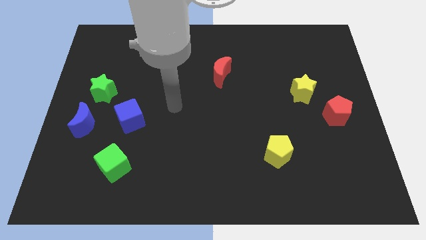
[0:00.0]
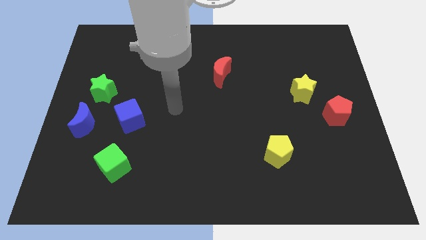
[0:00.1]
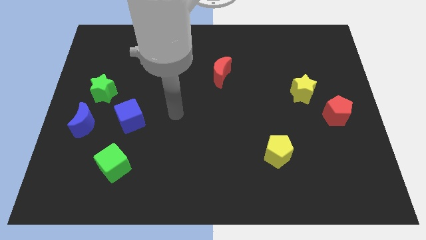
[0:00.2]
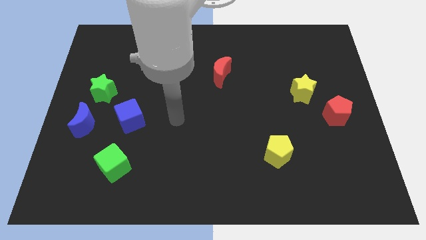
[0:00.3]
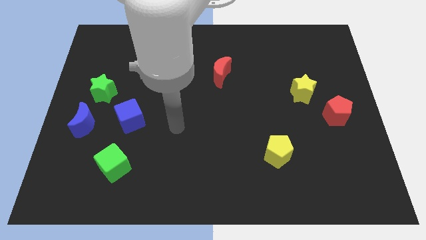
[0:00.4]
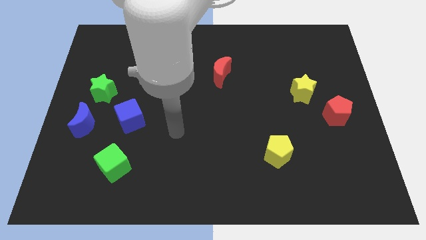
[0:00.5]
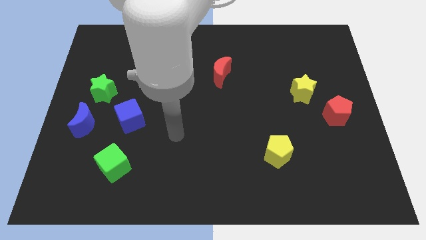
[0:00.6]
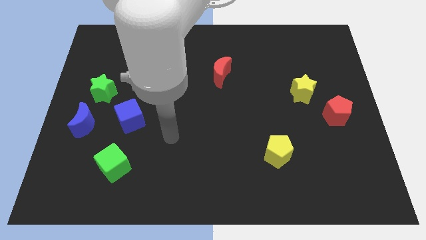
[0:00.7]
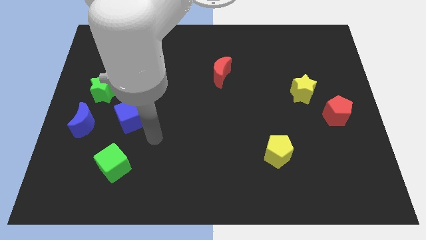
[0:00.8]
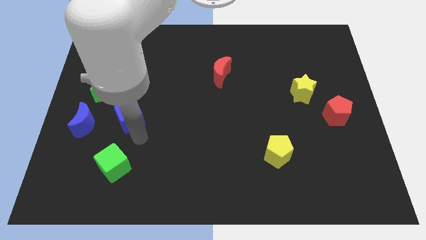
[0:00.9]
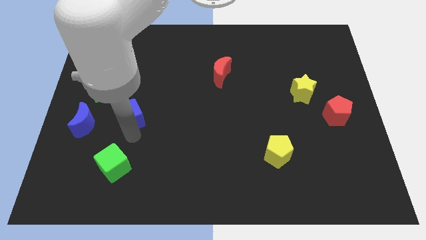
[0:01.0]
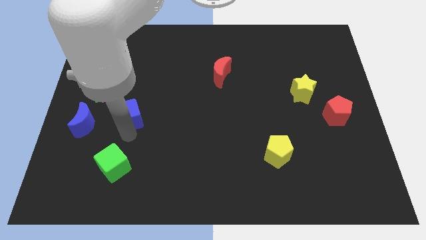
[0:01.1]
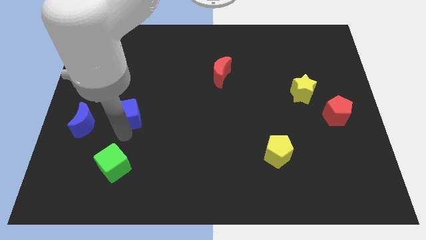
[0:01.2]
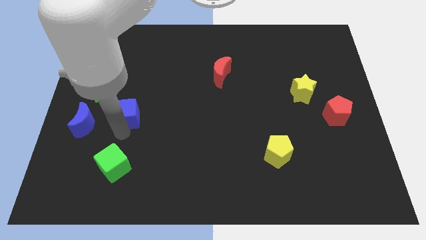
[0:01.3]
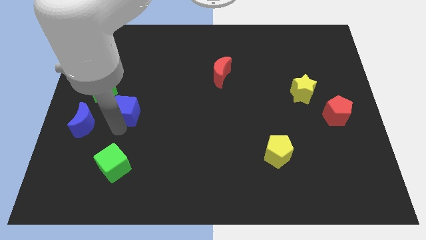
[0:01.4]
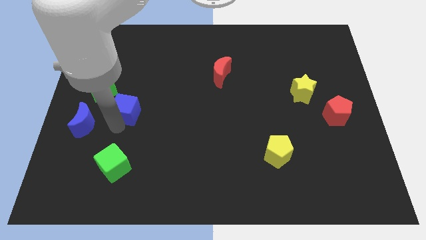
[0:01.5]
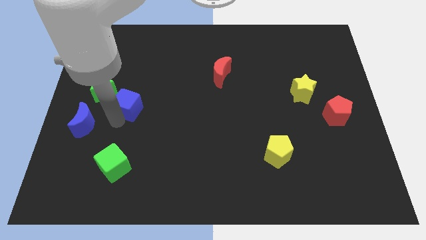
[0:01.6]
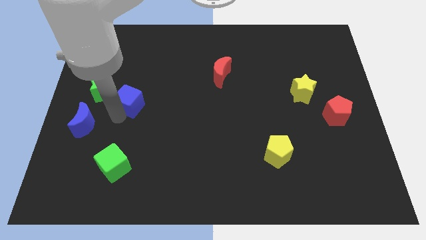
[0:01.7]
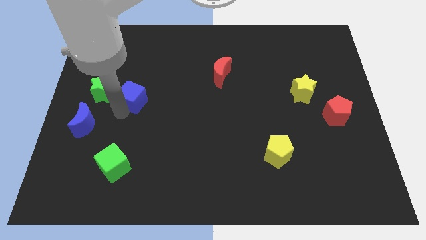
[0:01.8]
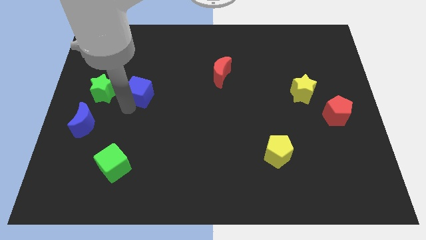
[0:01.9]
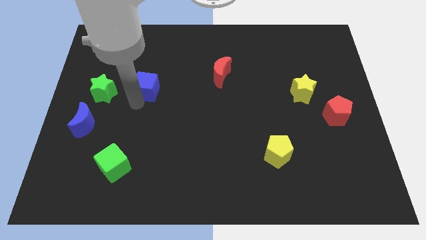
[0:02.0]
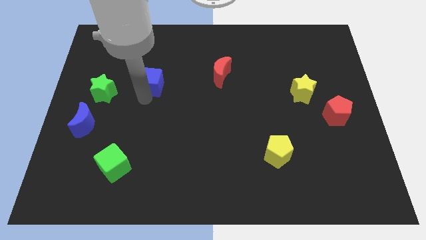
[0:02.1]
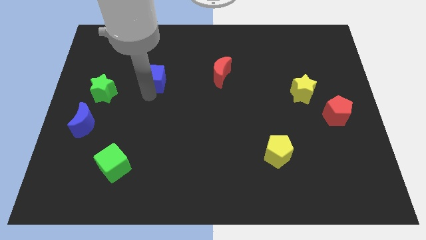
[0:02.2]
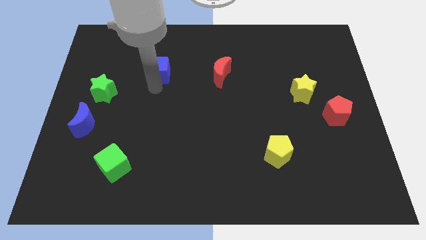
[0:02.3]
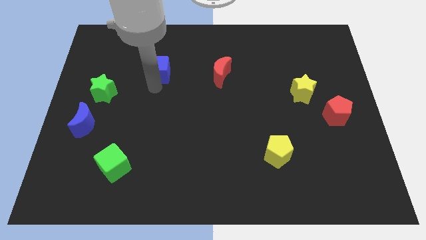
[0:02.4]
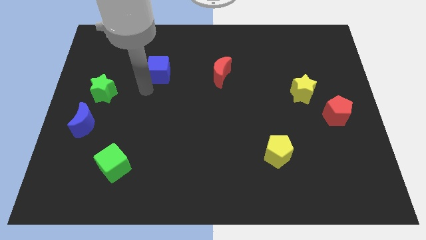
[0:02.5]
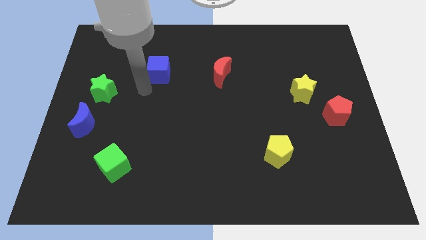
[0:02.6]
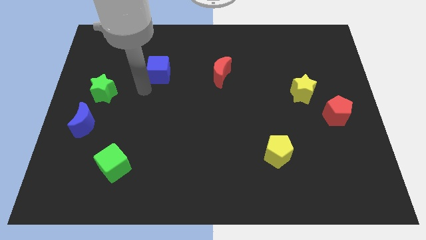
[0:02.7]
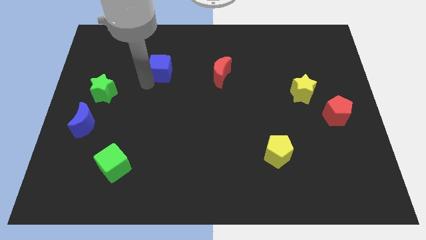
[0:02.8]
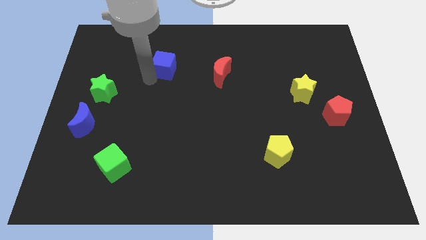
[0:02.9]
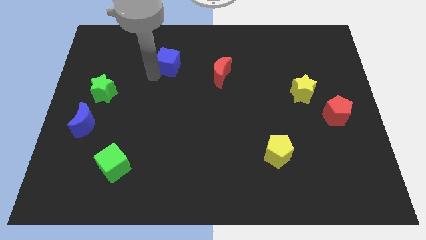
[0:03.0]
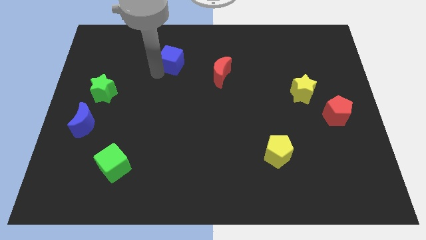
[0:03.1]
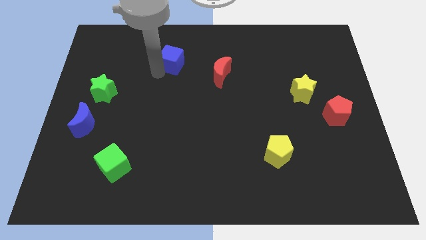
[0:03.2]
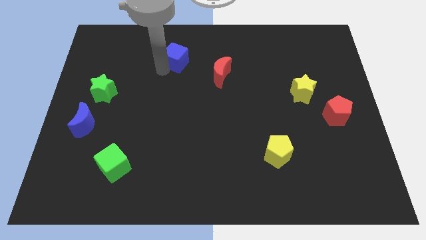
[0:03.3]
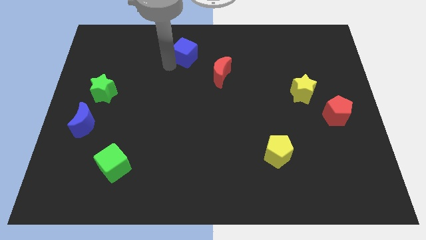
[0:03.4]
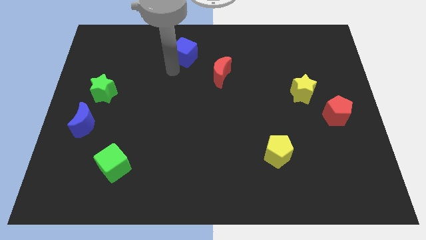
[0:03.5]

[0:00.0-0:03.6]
move the blue cube towards up side

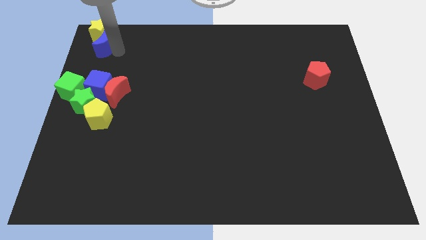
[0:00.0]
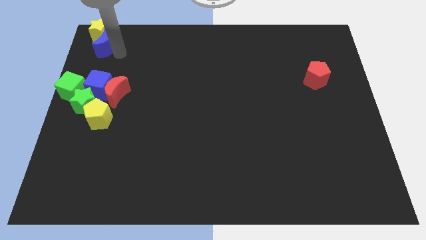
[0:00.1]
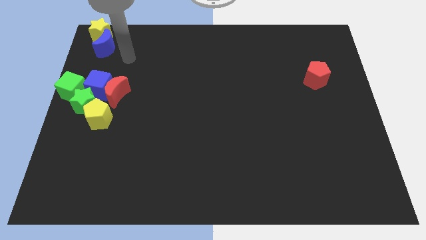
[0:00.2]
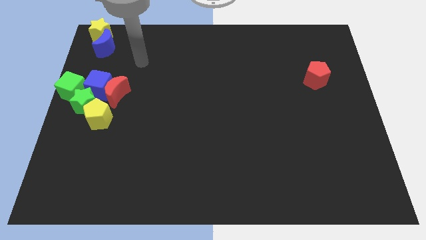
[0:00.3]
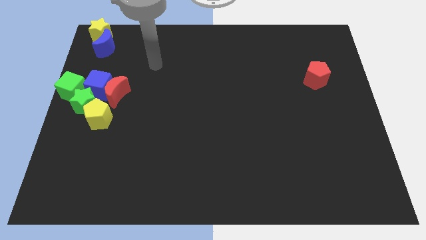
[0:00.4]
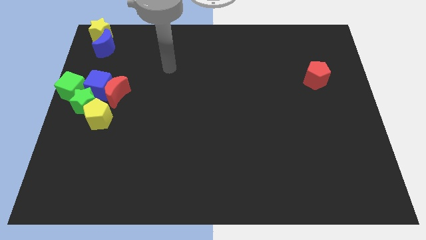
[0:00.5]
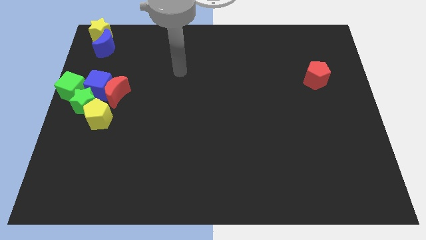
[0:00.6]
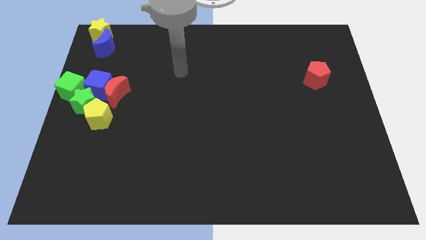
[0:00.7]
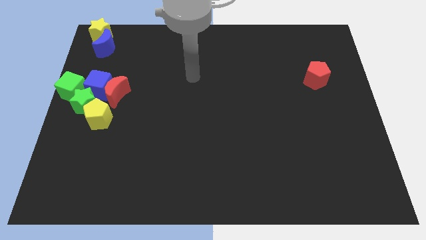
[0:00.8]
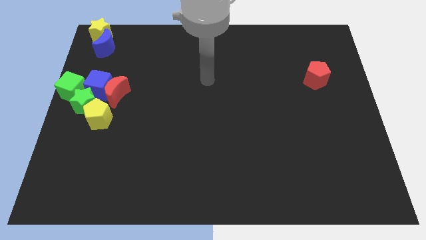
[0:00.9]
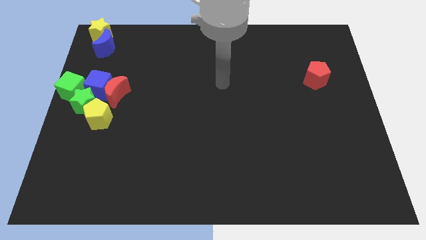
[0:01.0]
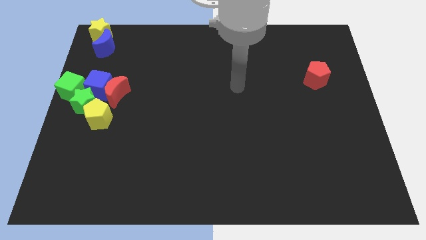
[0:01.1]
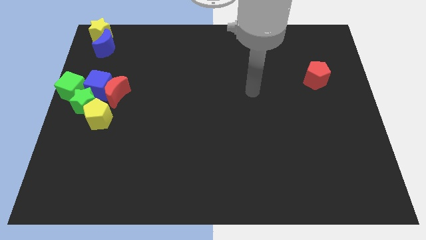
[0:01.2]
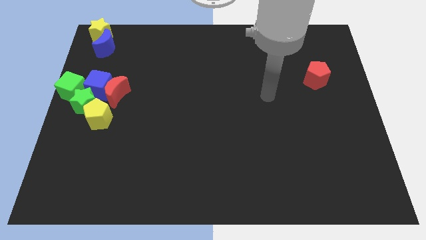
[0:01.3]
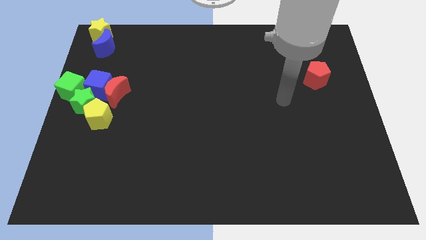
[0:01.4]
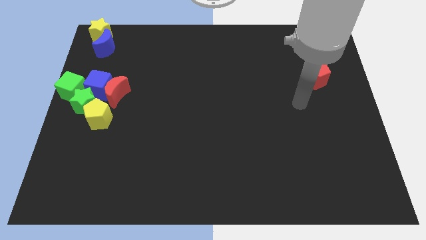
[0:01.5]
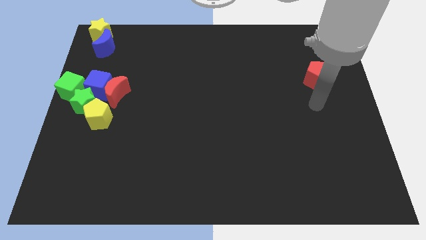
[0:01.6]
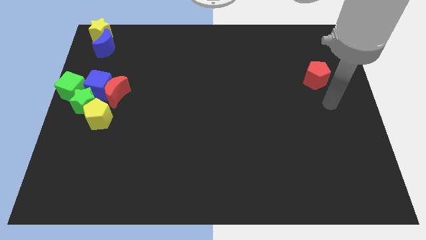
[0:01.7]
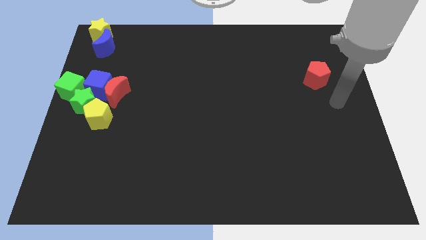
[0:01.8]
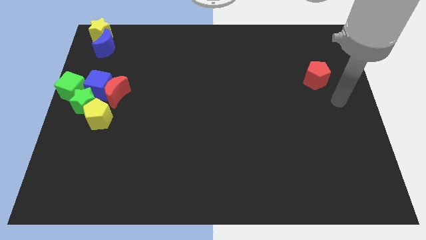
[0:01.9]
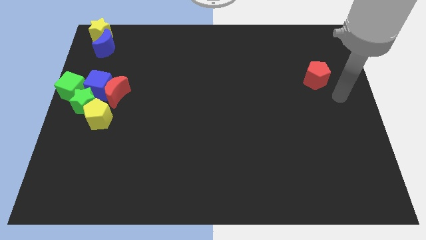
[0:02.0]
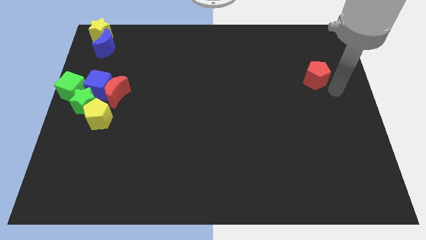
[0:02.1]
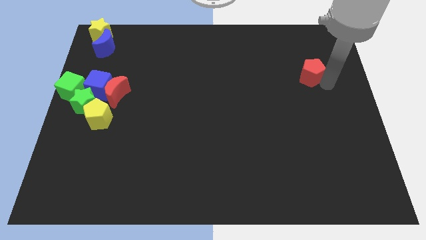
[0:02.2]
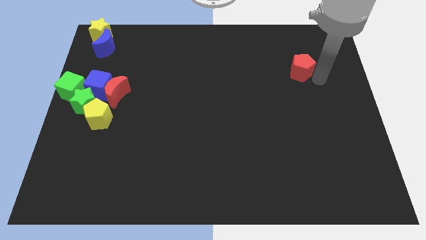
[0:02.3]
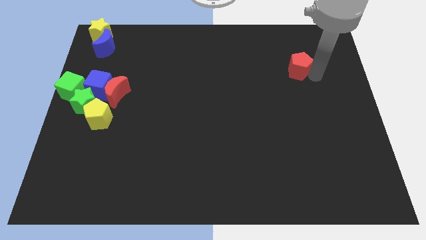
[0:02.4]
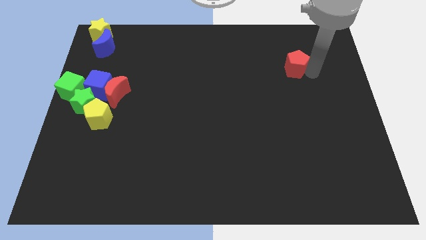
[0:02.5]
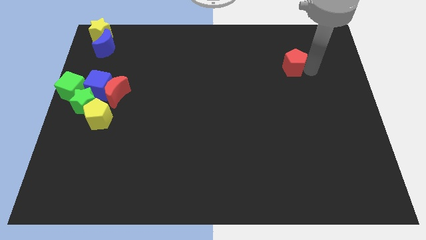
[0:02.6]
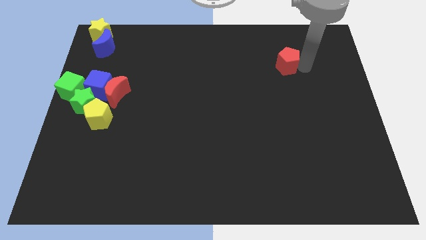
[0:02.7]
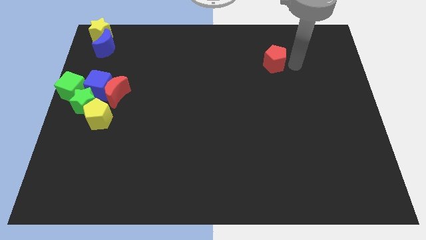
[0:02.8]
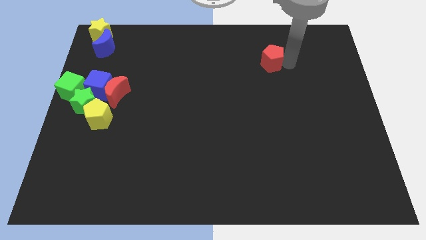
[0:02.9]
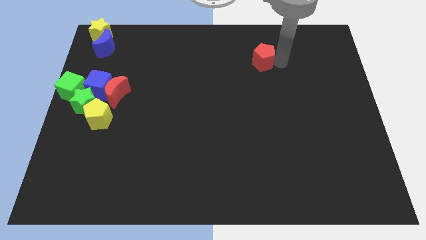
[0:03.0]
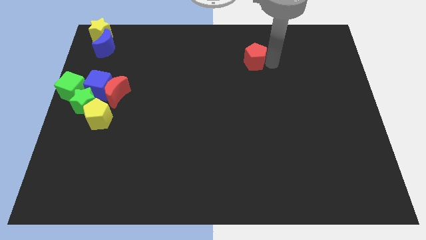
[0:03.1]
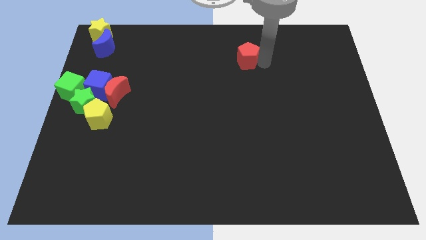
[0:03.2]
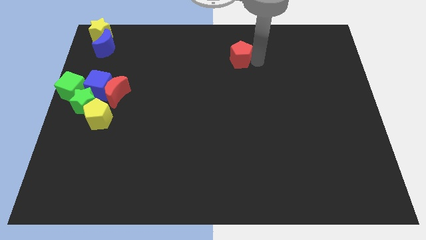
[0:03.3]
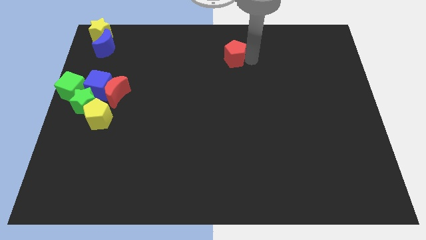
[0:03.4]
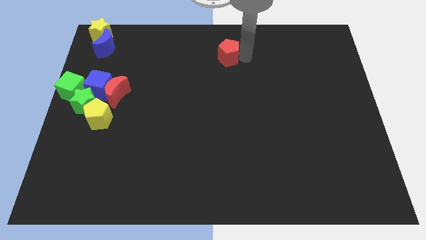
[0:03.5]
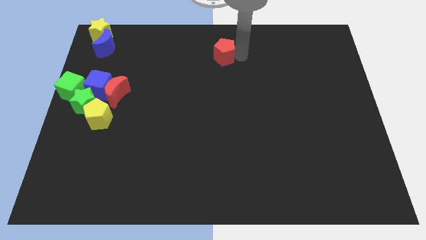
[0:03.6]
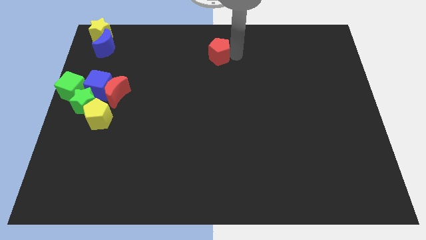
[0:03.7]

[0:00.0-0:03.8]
push the red pentagon towards the top center of the board

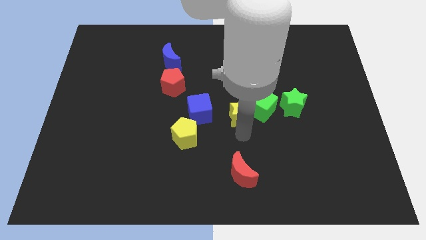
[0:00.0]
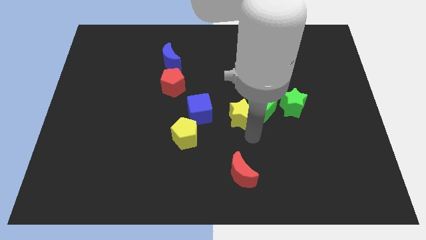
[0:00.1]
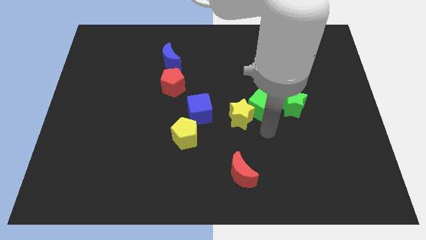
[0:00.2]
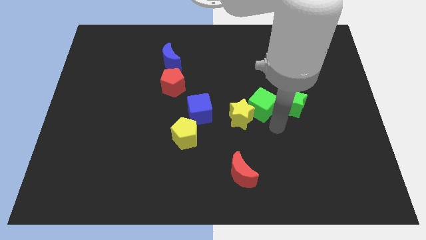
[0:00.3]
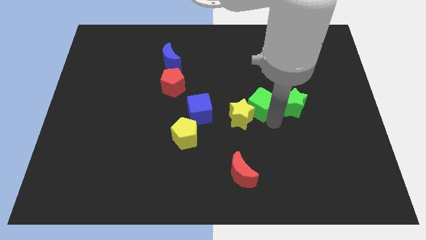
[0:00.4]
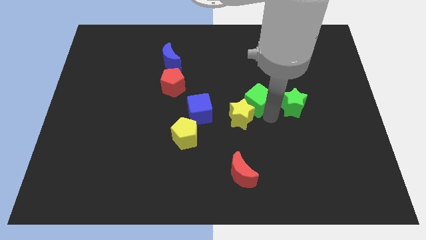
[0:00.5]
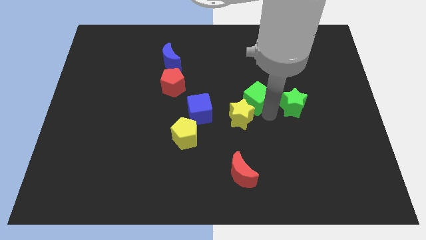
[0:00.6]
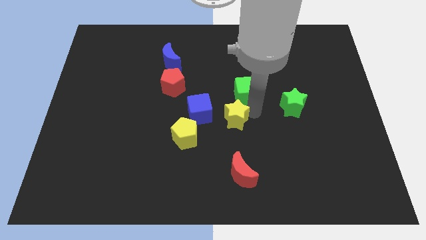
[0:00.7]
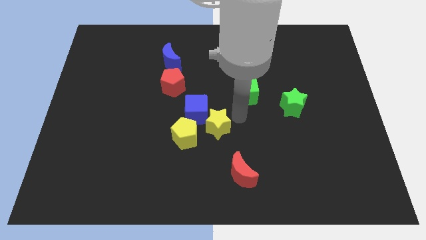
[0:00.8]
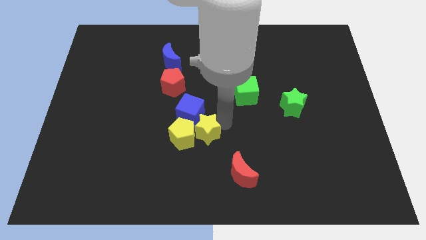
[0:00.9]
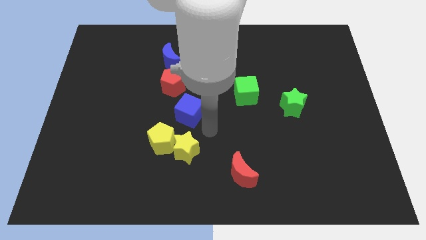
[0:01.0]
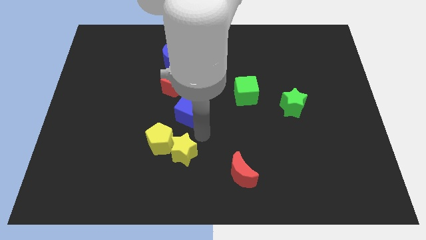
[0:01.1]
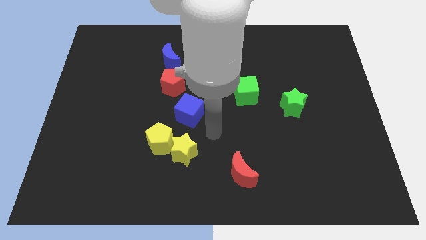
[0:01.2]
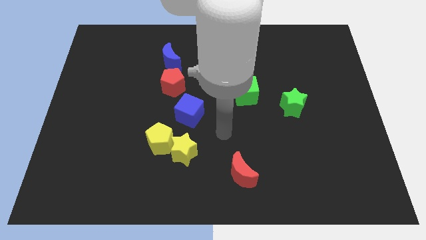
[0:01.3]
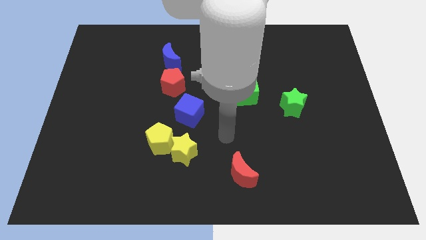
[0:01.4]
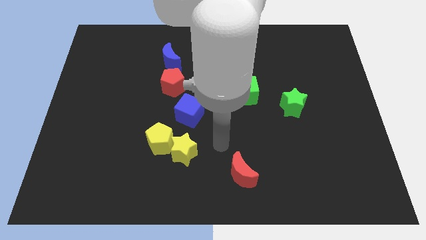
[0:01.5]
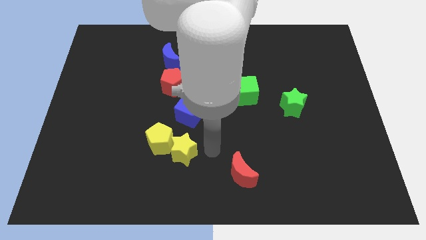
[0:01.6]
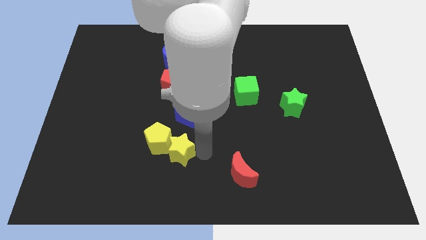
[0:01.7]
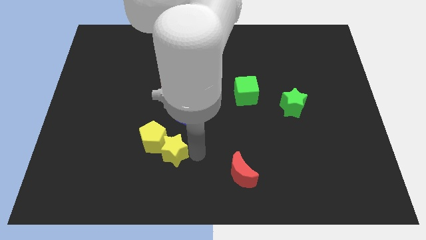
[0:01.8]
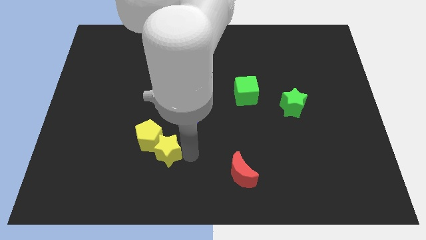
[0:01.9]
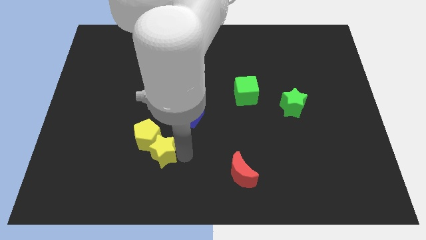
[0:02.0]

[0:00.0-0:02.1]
move the yellow blocks to the left
